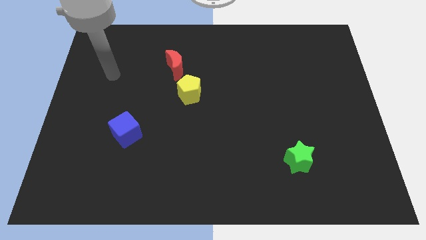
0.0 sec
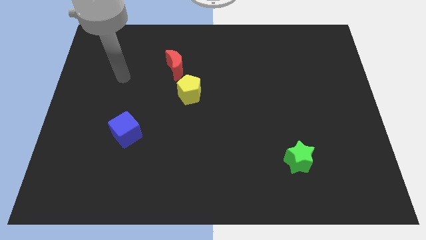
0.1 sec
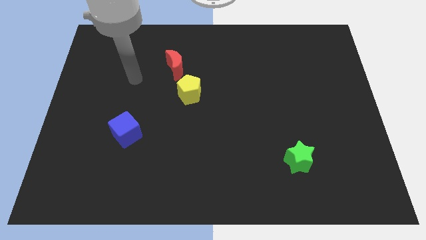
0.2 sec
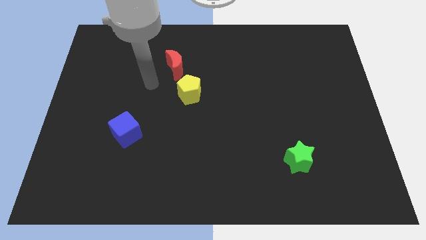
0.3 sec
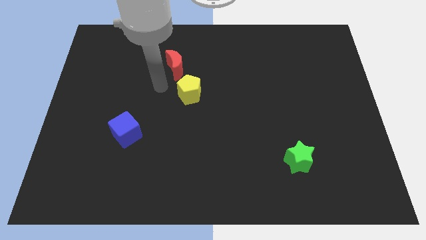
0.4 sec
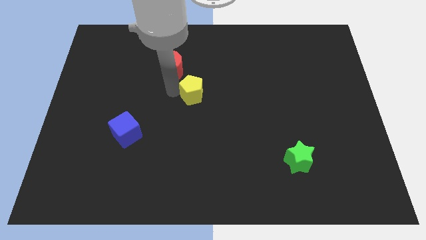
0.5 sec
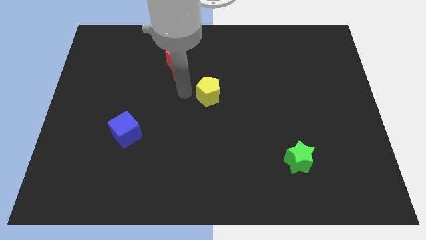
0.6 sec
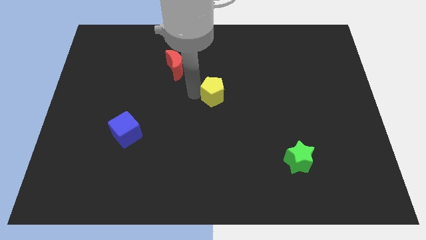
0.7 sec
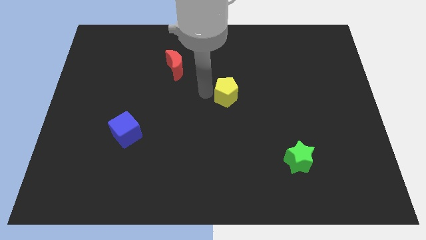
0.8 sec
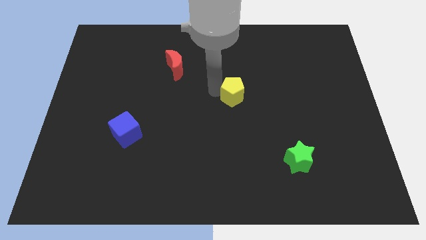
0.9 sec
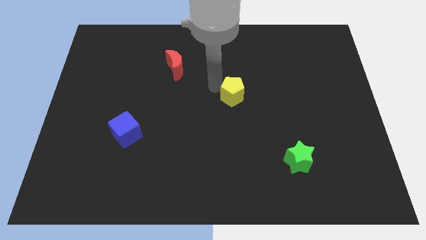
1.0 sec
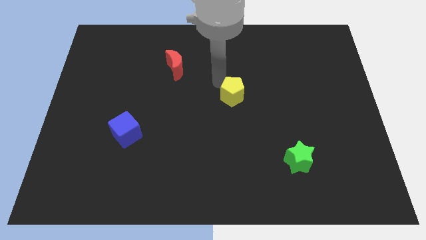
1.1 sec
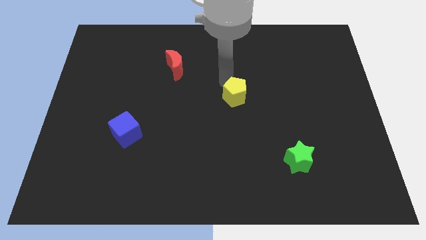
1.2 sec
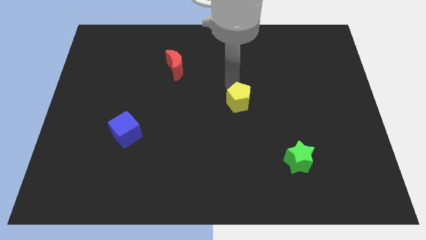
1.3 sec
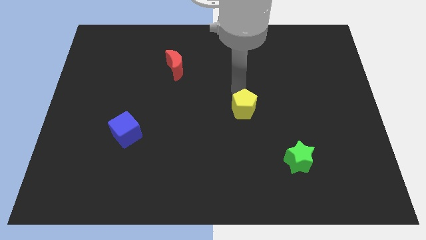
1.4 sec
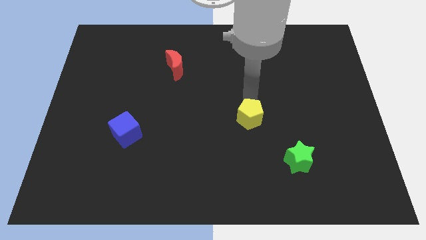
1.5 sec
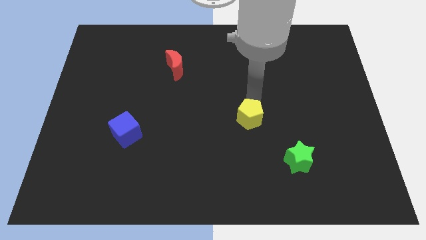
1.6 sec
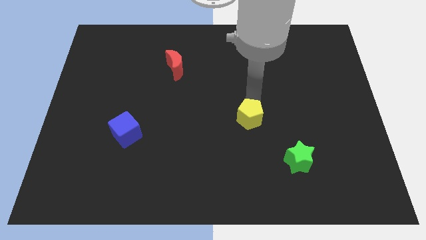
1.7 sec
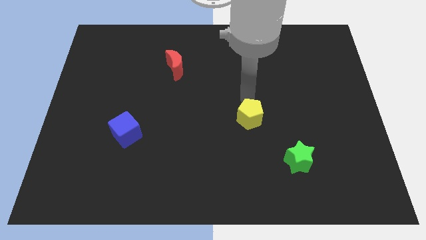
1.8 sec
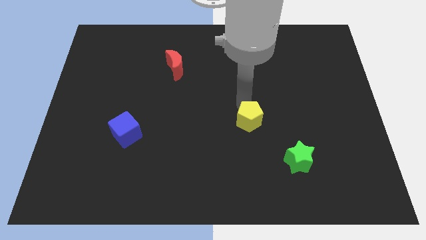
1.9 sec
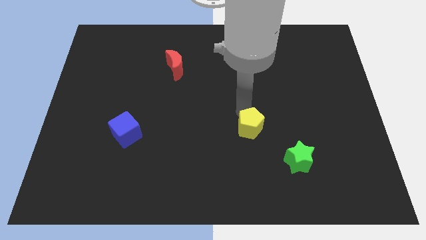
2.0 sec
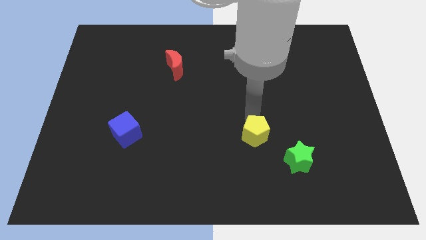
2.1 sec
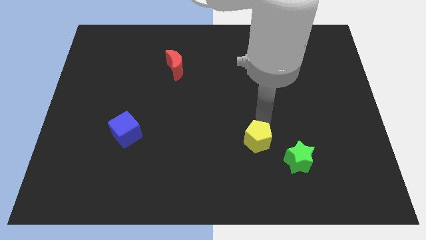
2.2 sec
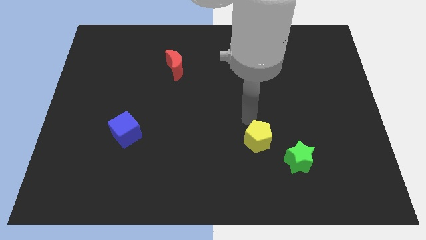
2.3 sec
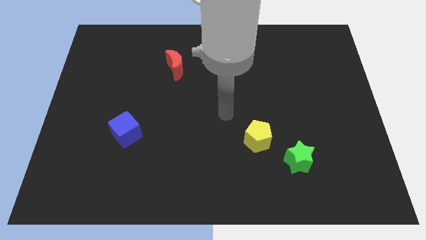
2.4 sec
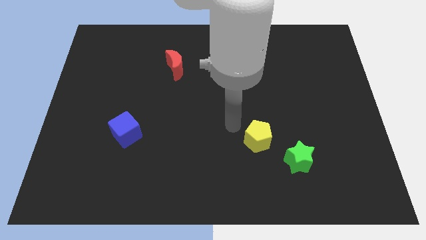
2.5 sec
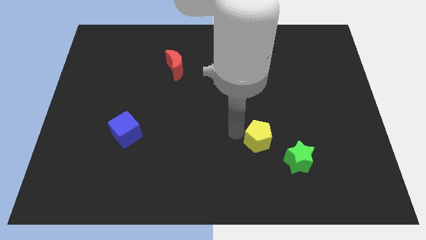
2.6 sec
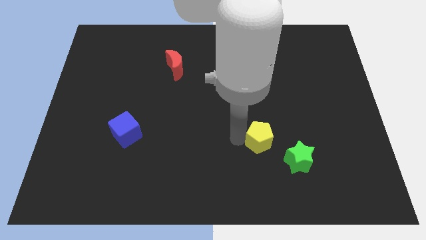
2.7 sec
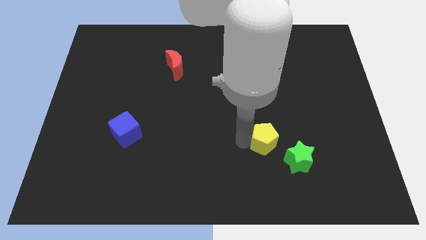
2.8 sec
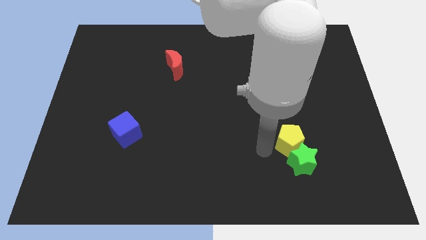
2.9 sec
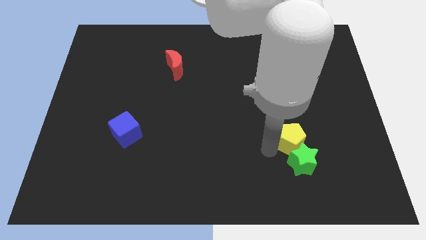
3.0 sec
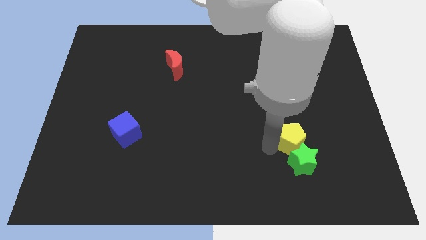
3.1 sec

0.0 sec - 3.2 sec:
push the yellow pentagon to the green block

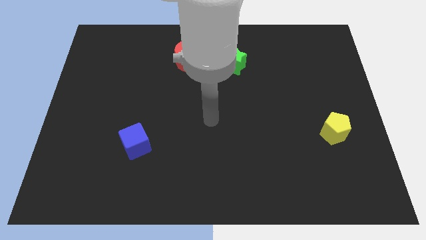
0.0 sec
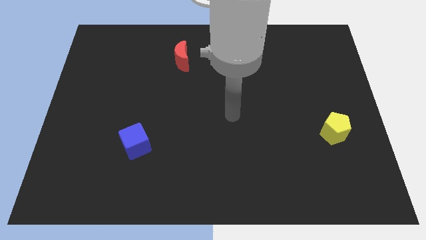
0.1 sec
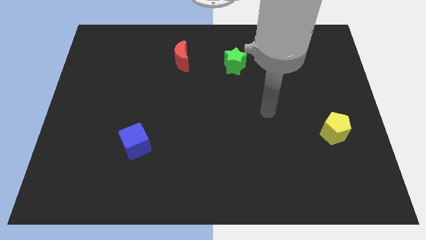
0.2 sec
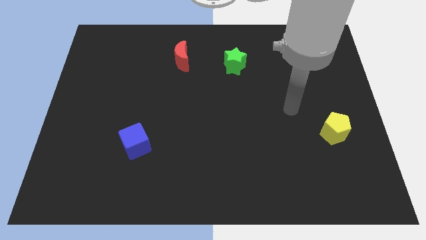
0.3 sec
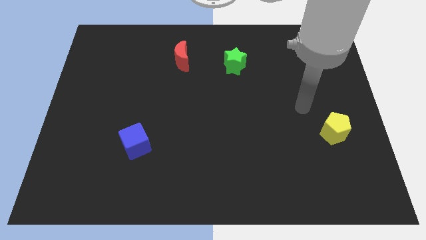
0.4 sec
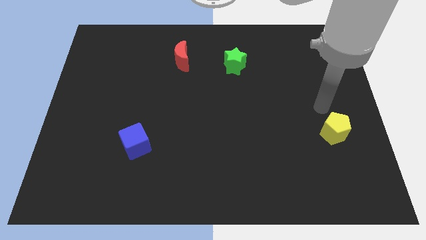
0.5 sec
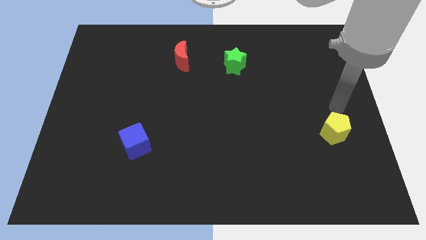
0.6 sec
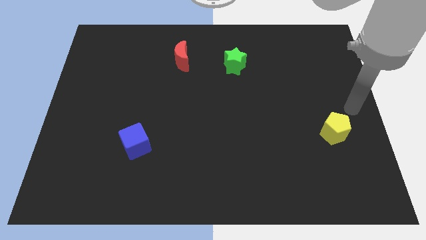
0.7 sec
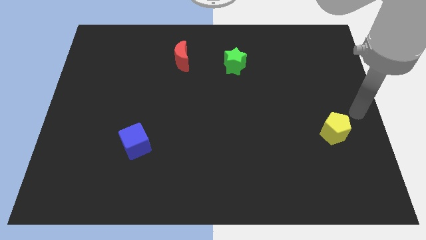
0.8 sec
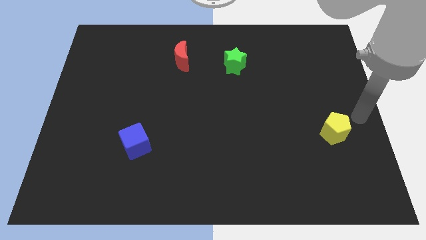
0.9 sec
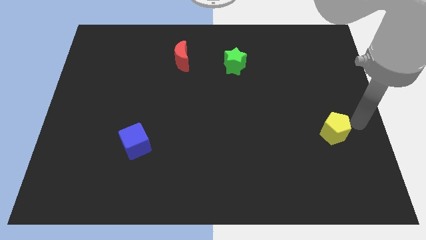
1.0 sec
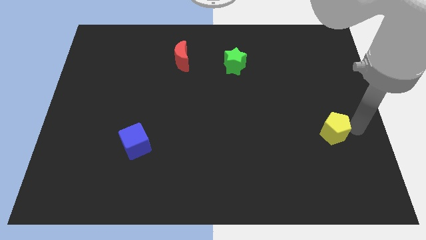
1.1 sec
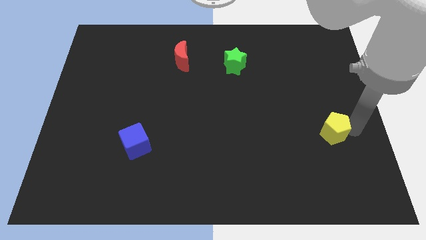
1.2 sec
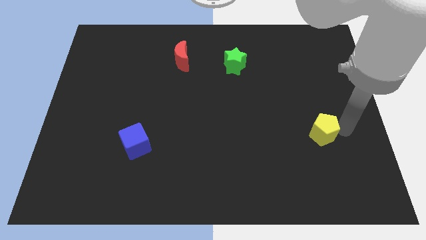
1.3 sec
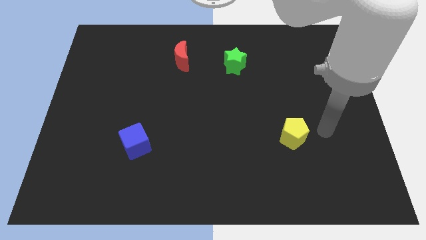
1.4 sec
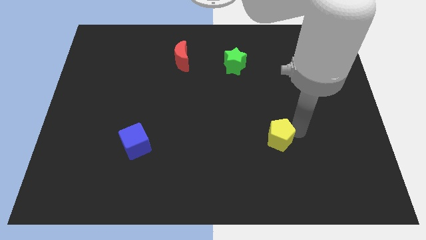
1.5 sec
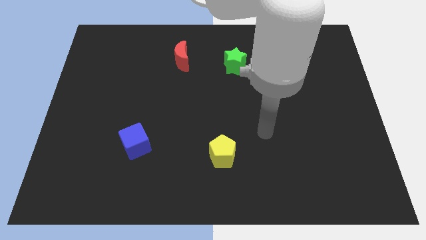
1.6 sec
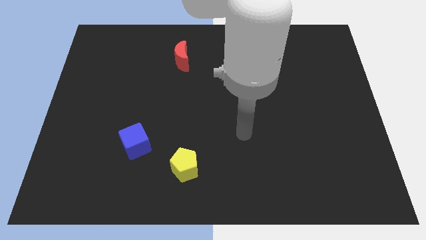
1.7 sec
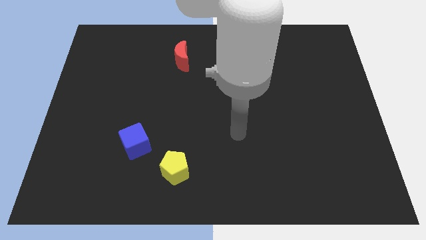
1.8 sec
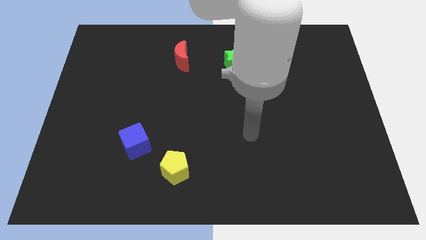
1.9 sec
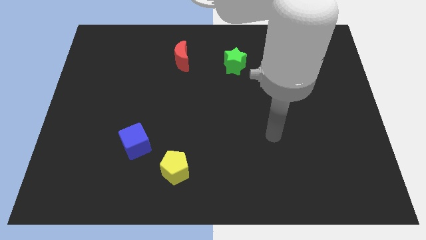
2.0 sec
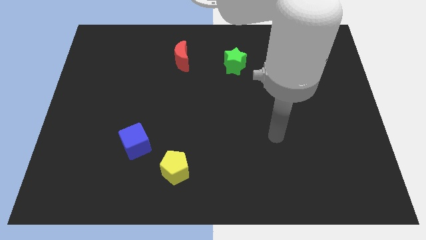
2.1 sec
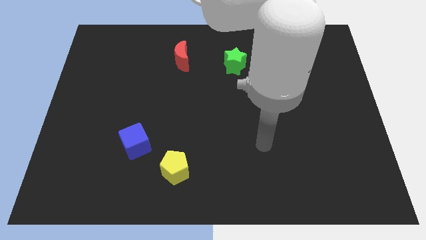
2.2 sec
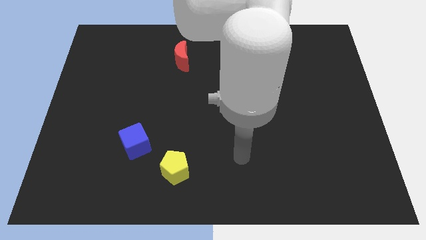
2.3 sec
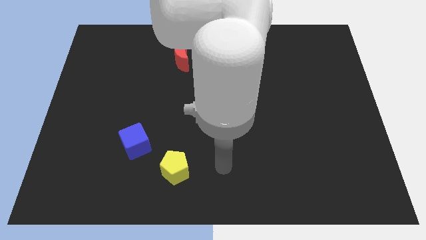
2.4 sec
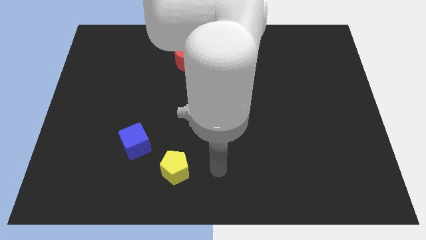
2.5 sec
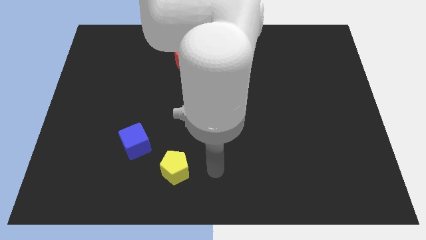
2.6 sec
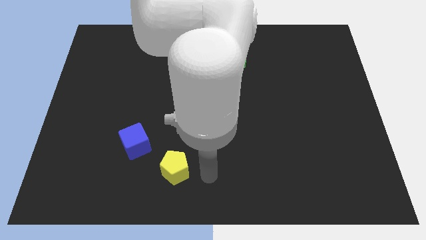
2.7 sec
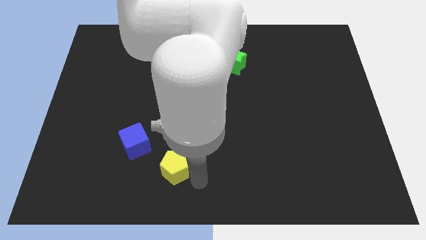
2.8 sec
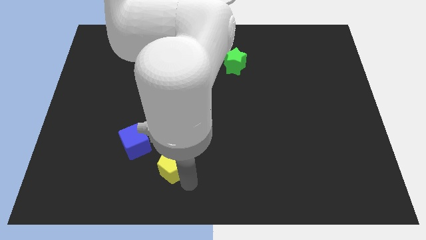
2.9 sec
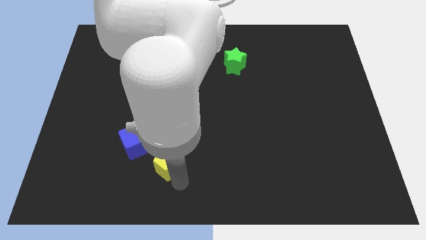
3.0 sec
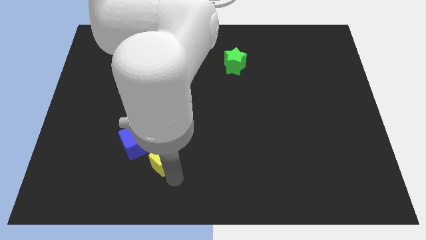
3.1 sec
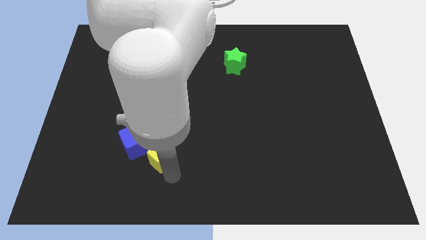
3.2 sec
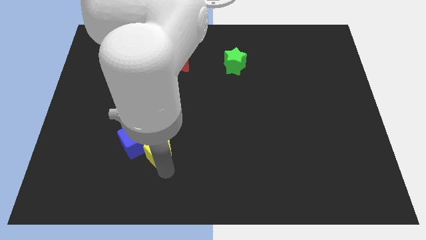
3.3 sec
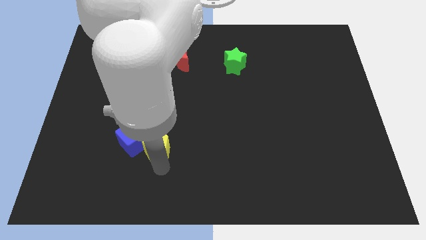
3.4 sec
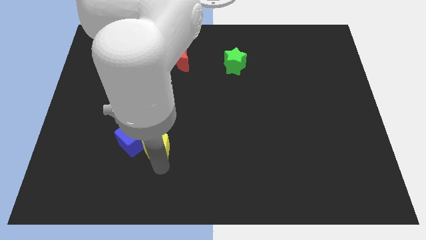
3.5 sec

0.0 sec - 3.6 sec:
put the yellow pentagon next to the blue block

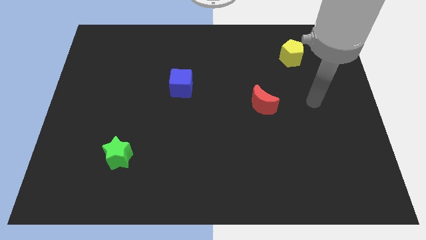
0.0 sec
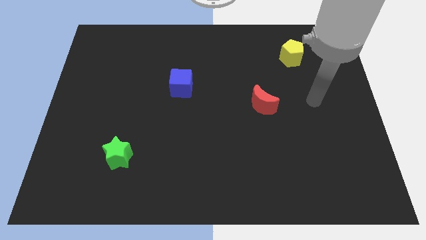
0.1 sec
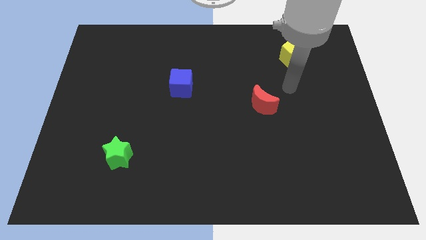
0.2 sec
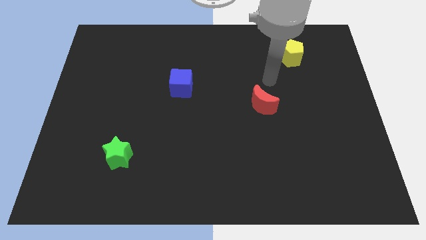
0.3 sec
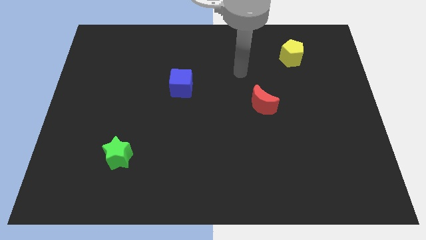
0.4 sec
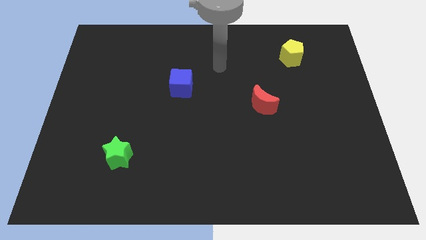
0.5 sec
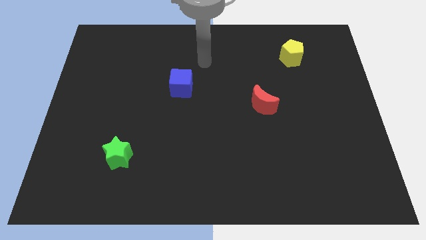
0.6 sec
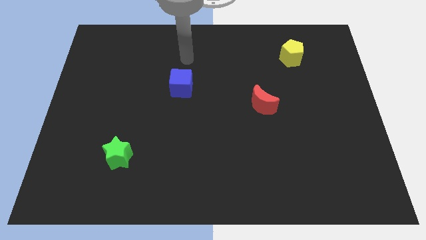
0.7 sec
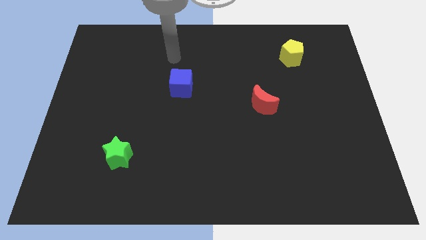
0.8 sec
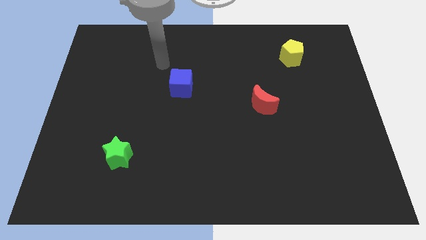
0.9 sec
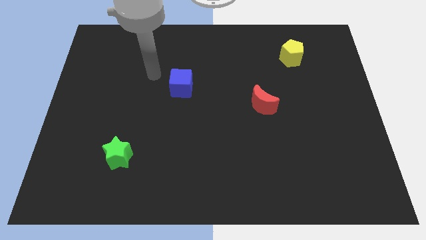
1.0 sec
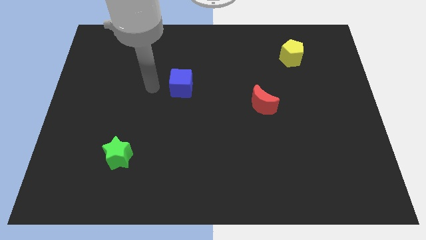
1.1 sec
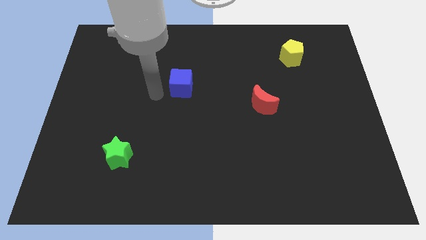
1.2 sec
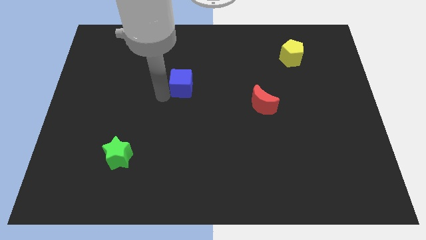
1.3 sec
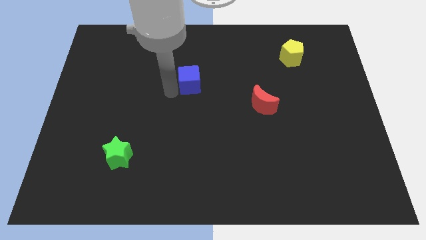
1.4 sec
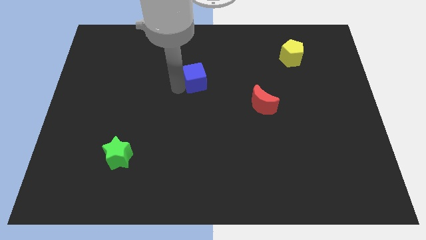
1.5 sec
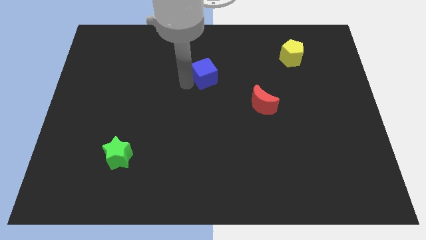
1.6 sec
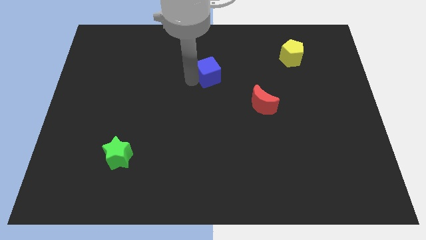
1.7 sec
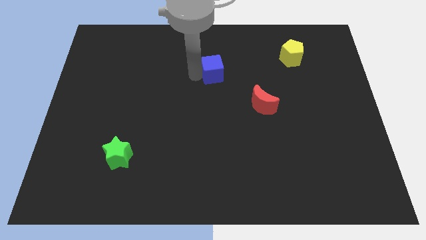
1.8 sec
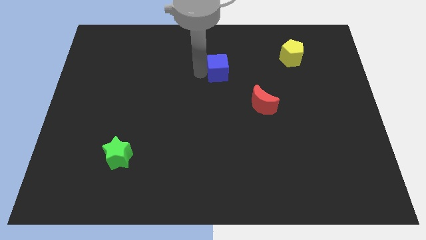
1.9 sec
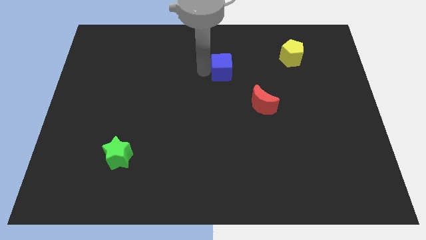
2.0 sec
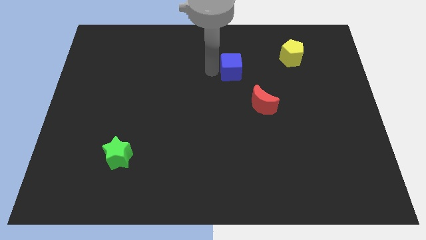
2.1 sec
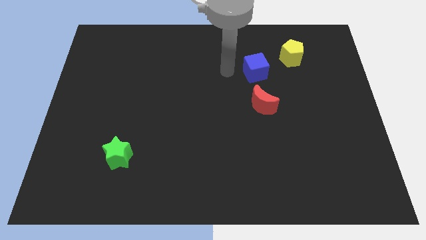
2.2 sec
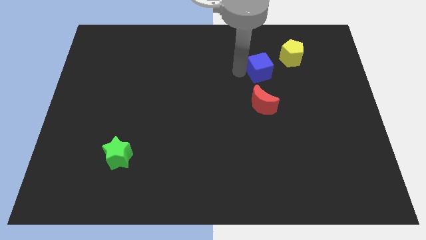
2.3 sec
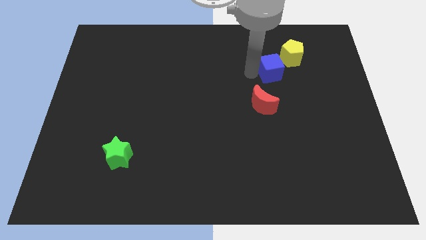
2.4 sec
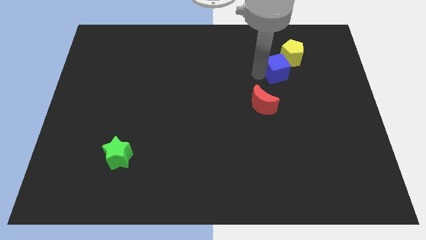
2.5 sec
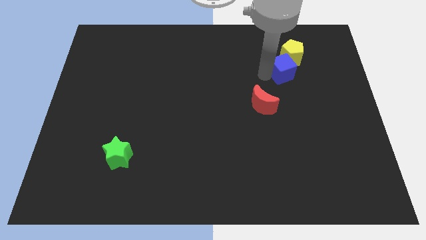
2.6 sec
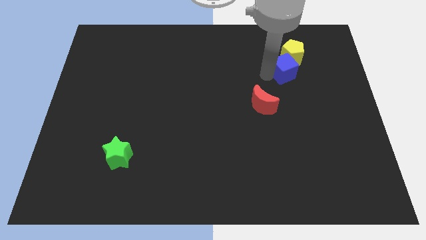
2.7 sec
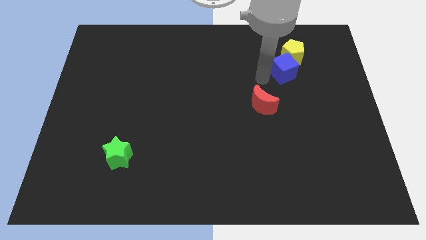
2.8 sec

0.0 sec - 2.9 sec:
slide the cube close to the yellow block
